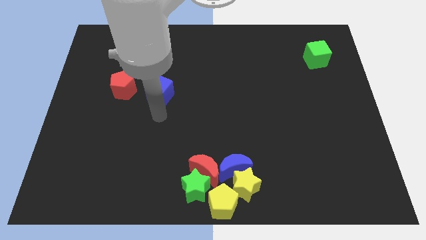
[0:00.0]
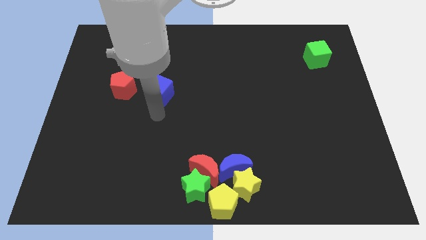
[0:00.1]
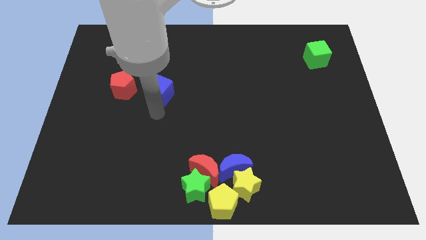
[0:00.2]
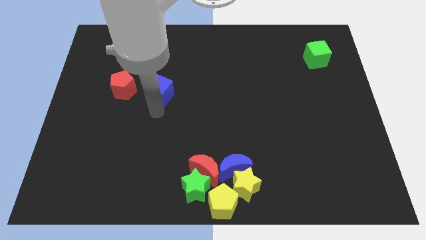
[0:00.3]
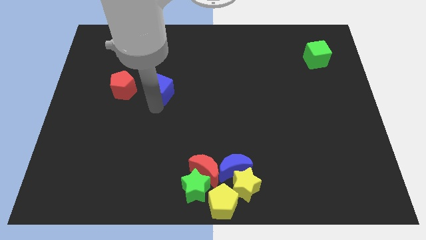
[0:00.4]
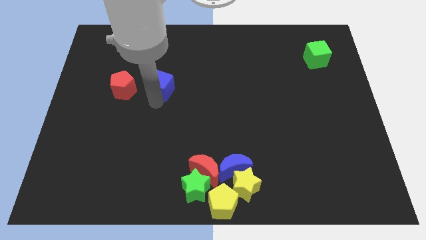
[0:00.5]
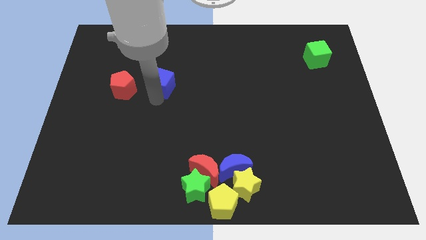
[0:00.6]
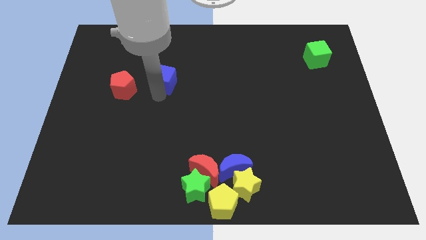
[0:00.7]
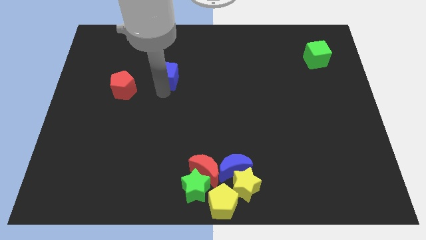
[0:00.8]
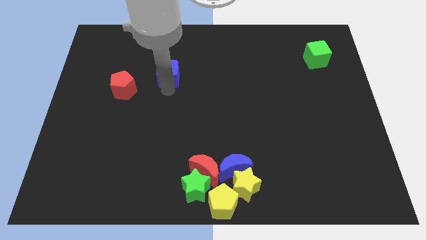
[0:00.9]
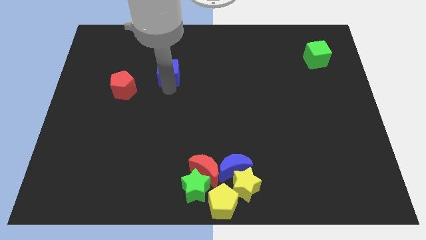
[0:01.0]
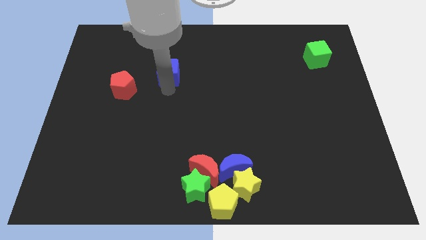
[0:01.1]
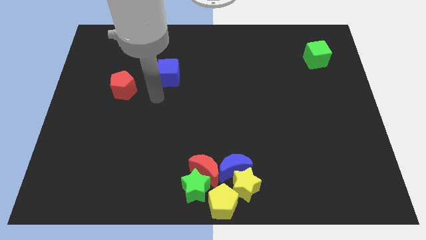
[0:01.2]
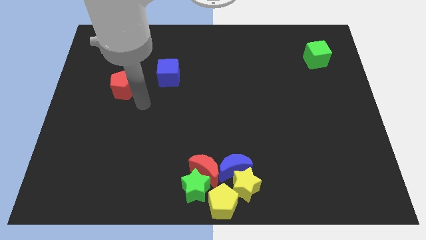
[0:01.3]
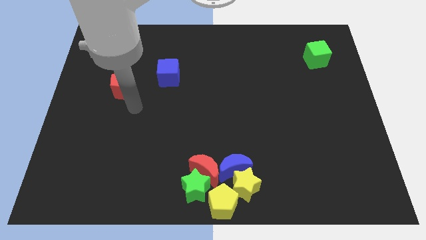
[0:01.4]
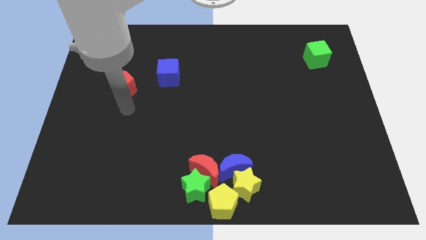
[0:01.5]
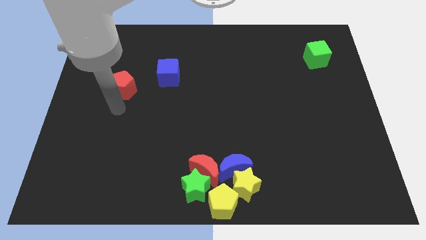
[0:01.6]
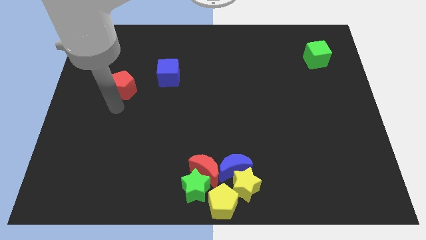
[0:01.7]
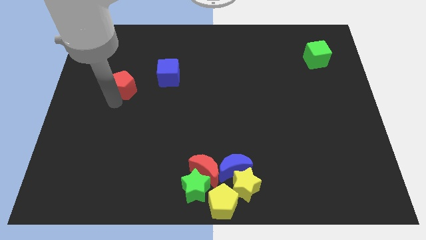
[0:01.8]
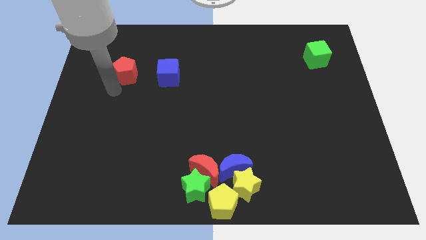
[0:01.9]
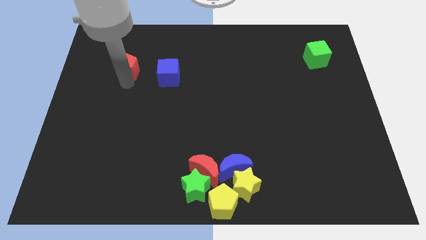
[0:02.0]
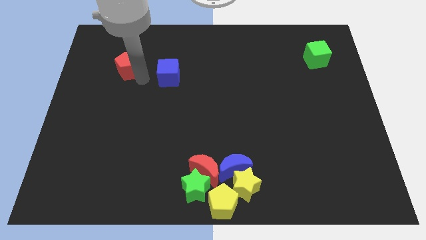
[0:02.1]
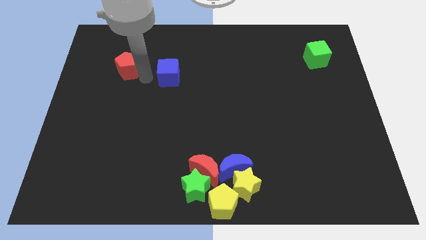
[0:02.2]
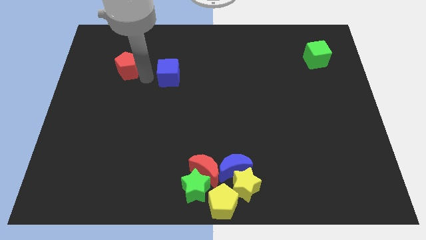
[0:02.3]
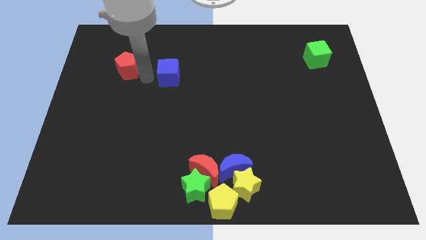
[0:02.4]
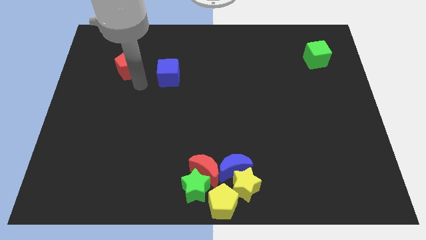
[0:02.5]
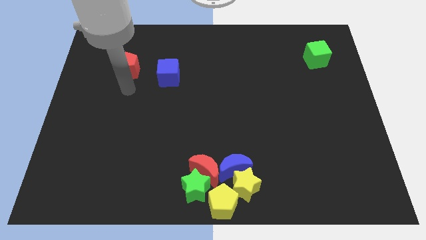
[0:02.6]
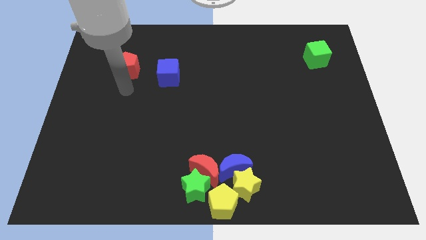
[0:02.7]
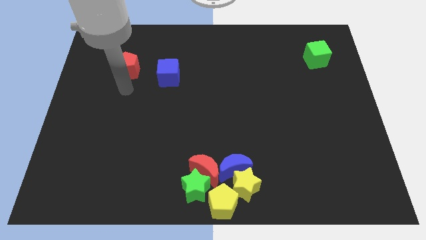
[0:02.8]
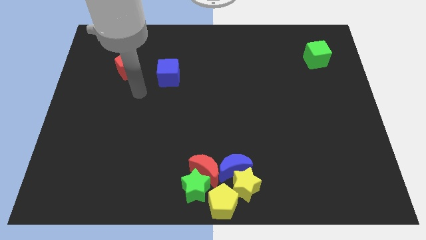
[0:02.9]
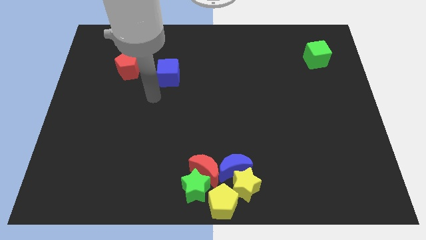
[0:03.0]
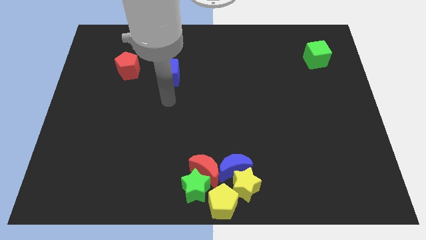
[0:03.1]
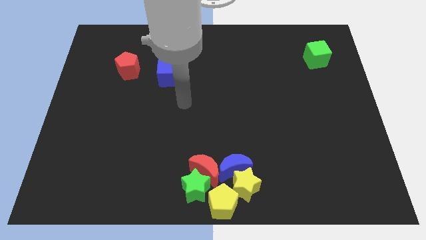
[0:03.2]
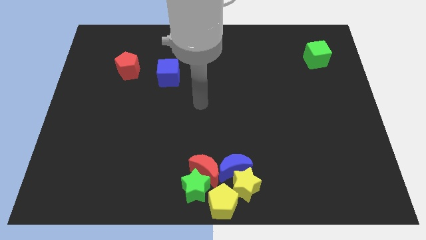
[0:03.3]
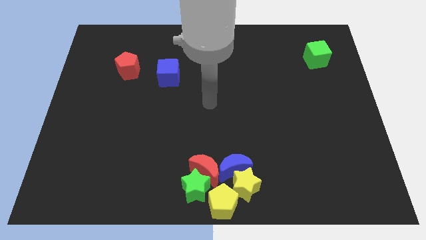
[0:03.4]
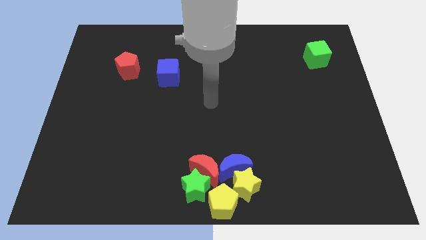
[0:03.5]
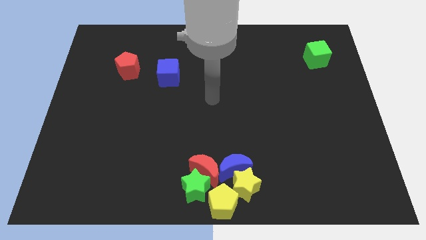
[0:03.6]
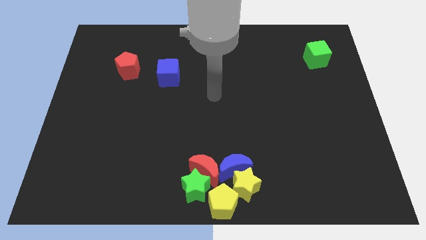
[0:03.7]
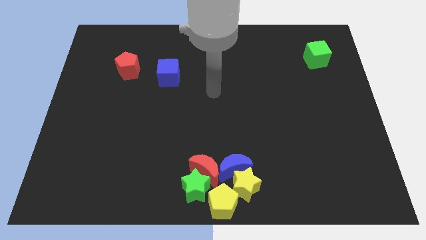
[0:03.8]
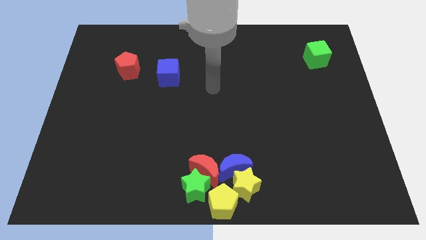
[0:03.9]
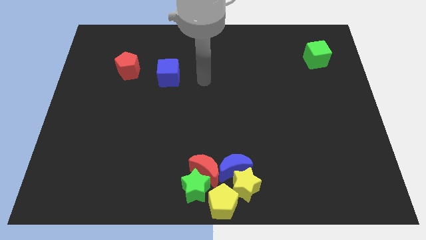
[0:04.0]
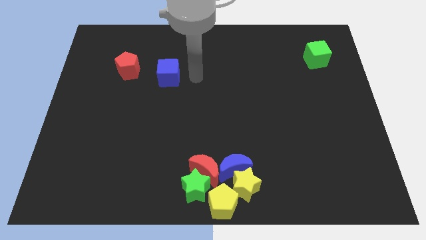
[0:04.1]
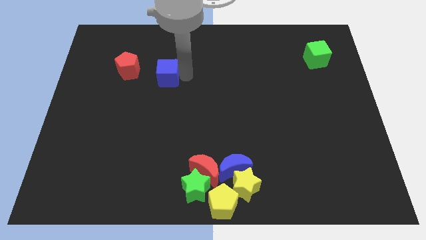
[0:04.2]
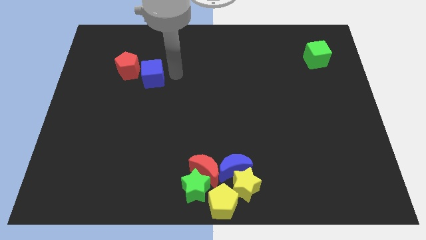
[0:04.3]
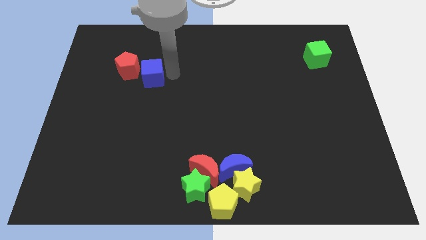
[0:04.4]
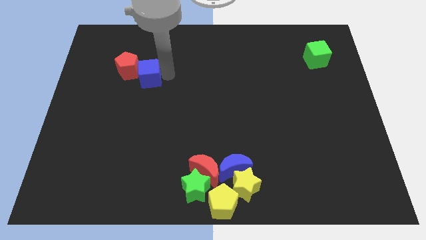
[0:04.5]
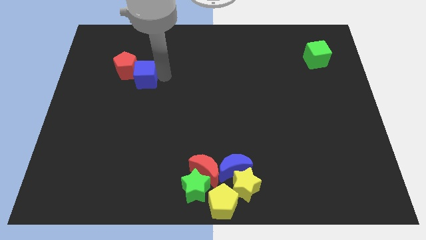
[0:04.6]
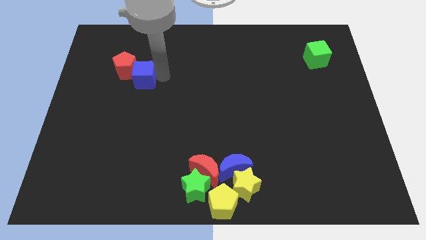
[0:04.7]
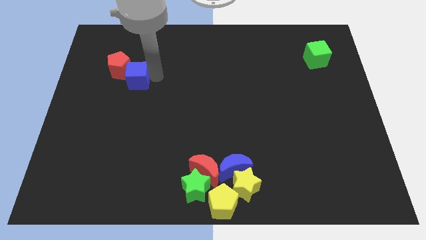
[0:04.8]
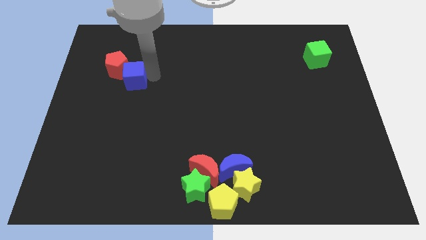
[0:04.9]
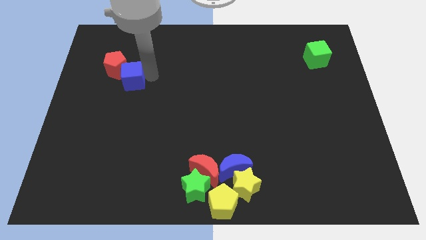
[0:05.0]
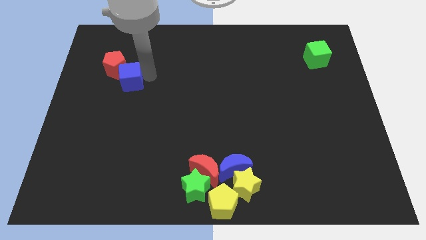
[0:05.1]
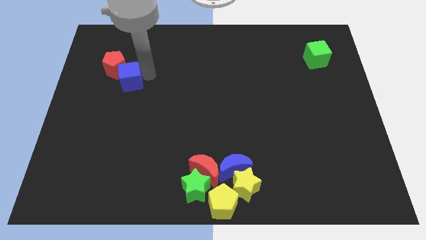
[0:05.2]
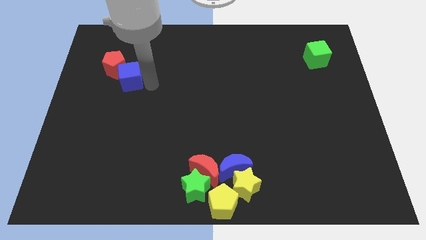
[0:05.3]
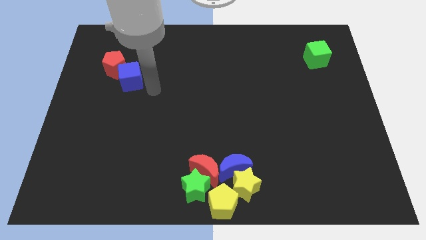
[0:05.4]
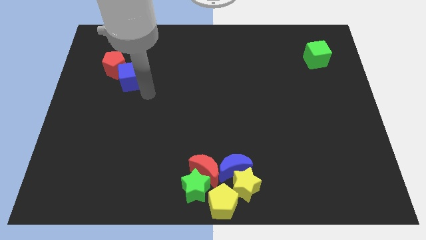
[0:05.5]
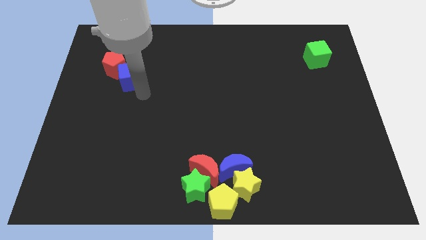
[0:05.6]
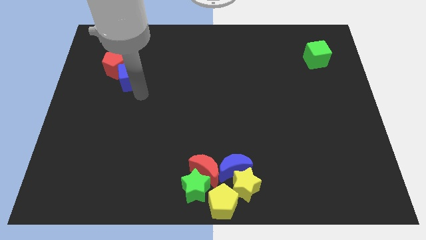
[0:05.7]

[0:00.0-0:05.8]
push the blue cube into the red pentagon

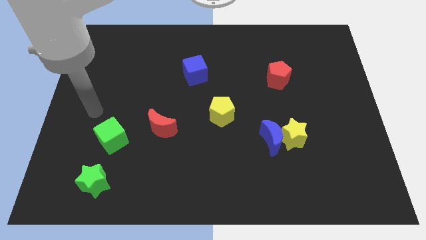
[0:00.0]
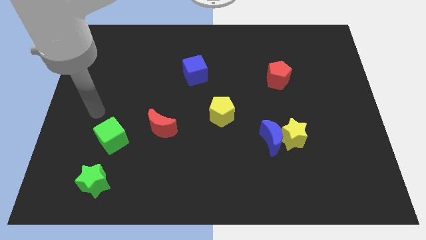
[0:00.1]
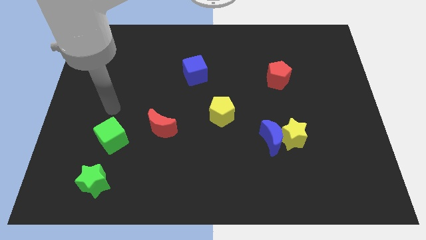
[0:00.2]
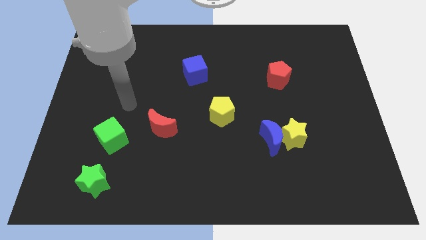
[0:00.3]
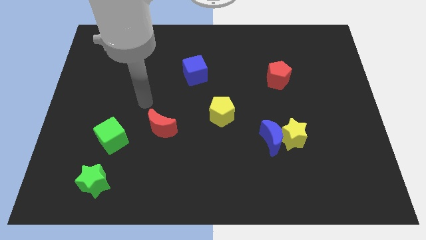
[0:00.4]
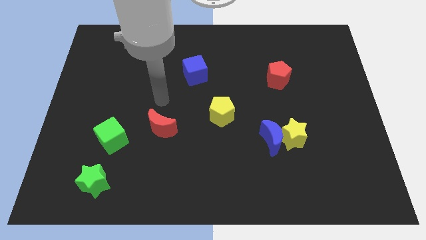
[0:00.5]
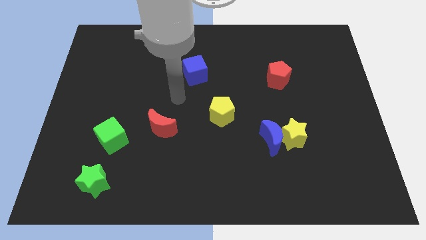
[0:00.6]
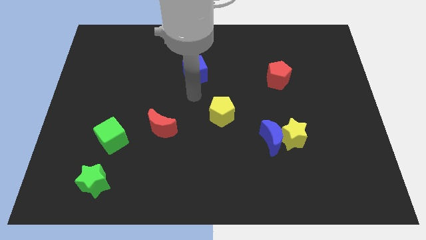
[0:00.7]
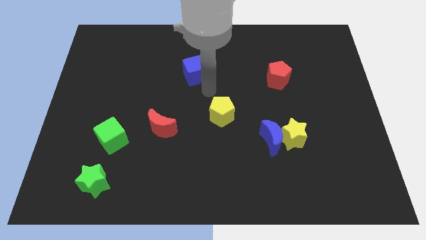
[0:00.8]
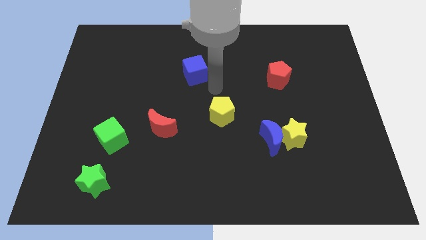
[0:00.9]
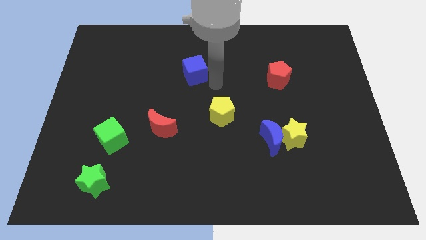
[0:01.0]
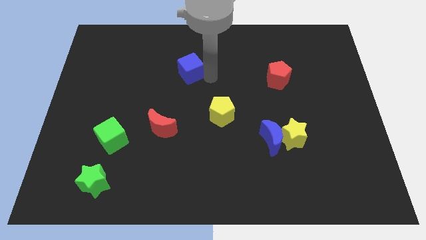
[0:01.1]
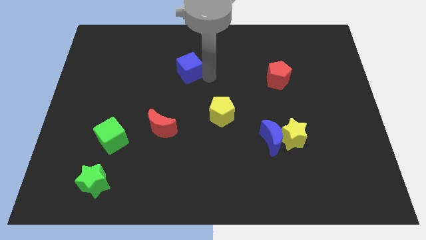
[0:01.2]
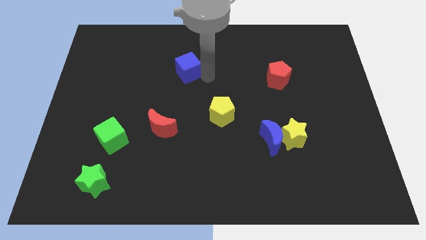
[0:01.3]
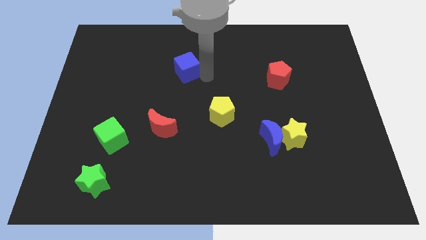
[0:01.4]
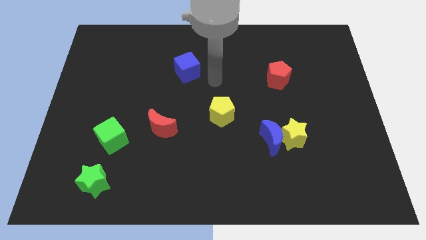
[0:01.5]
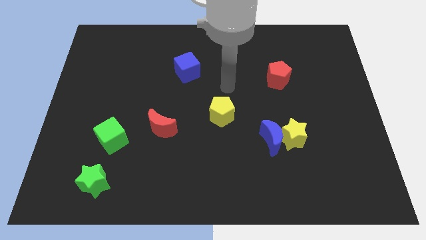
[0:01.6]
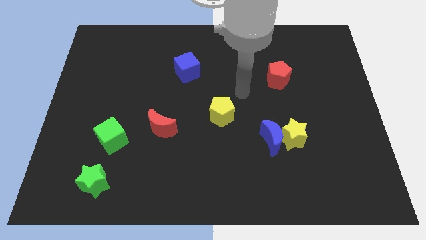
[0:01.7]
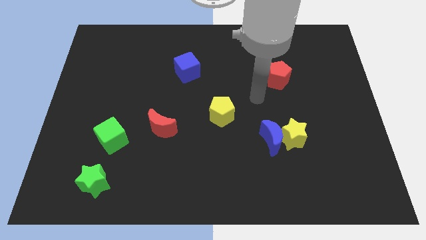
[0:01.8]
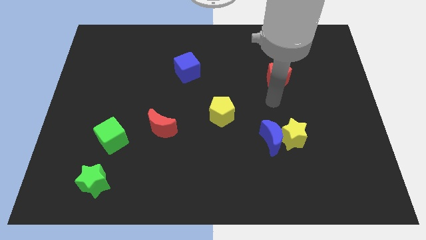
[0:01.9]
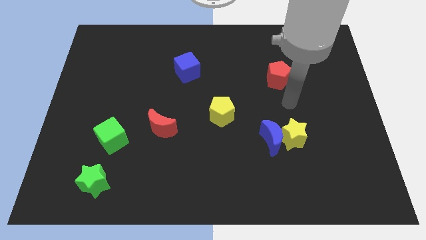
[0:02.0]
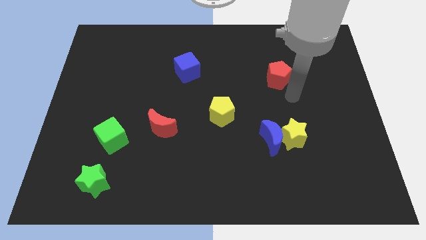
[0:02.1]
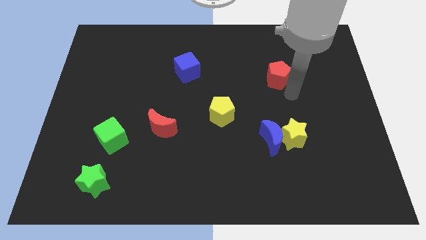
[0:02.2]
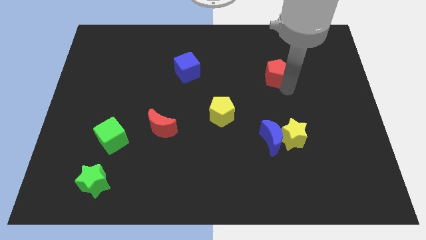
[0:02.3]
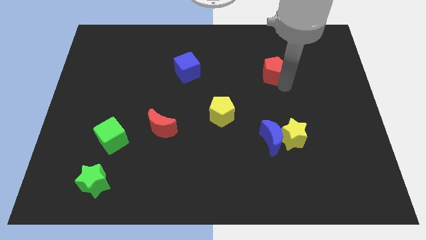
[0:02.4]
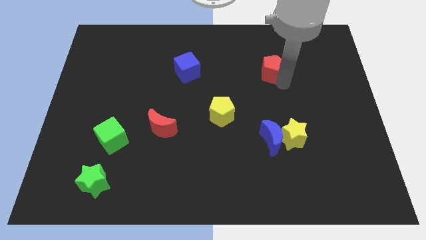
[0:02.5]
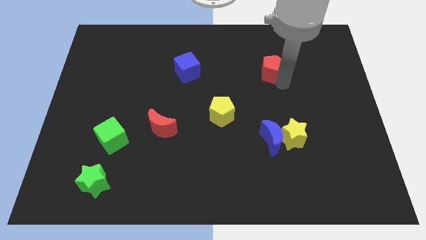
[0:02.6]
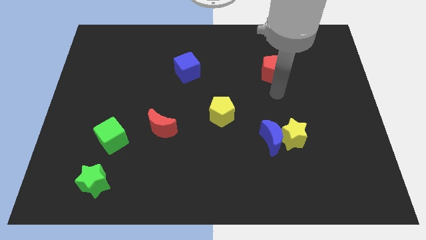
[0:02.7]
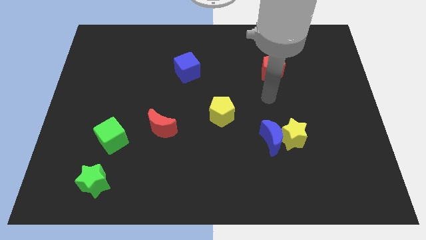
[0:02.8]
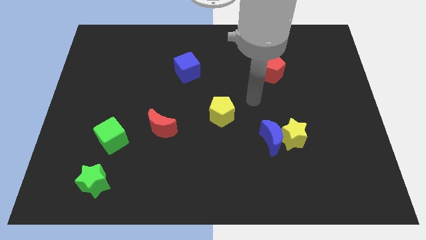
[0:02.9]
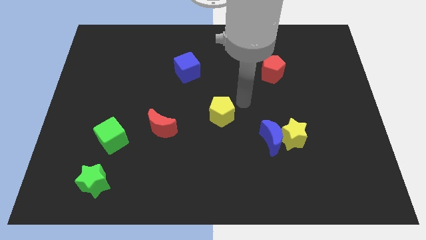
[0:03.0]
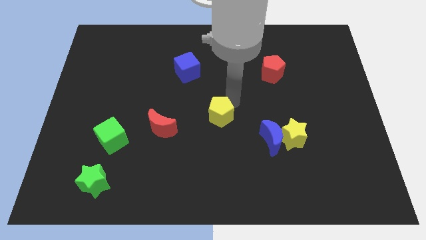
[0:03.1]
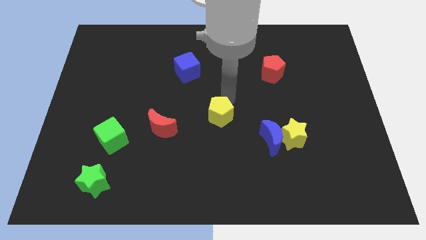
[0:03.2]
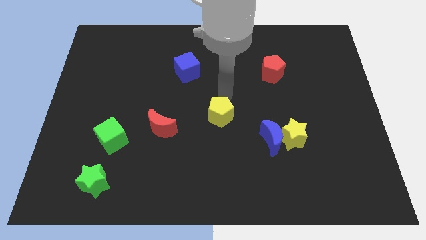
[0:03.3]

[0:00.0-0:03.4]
place red pentagon to the top of the blue moon
